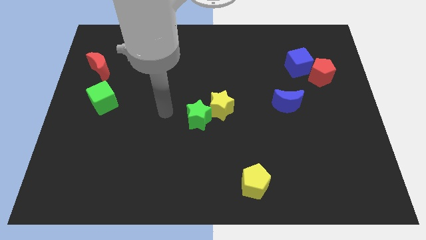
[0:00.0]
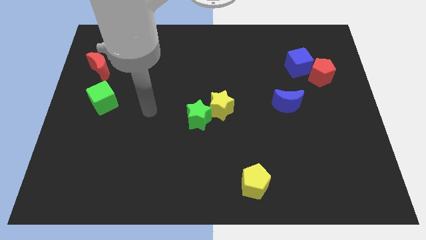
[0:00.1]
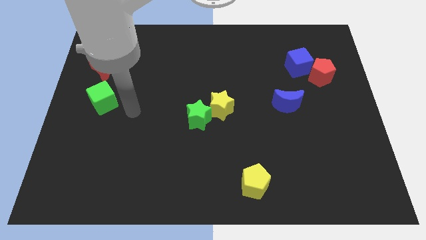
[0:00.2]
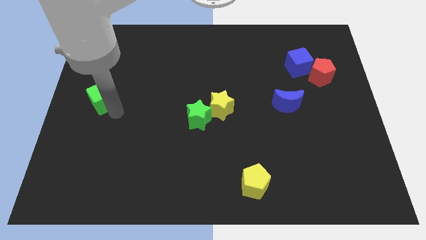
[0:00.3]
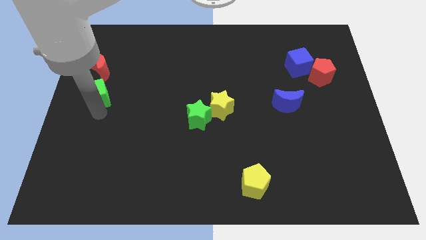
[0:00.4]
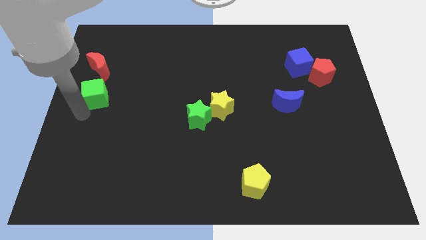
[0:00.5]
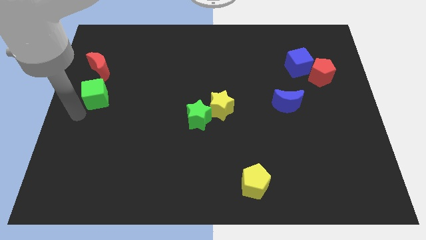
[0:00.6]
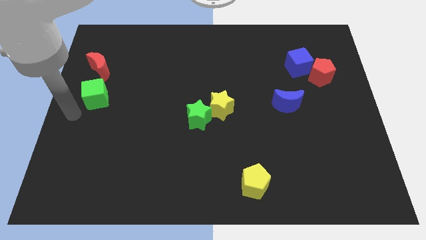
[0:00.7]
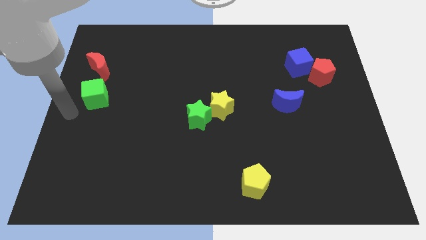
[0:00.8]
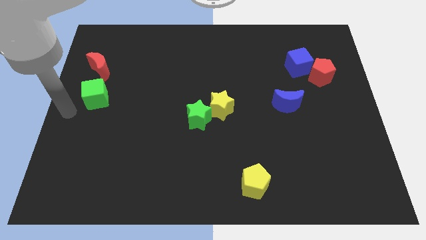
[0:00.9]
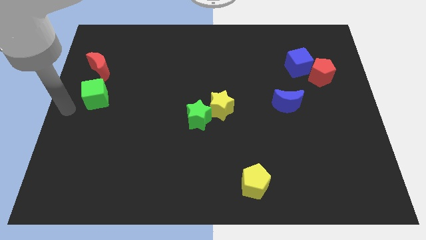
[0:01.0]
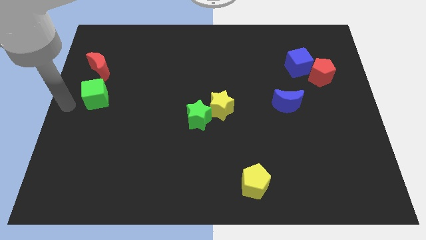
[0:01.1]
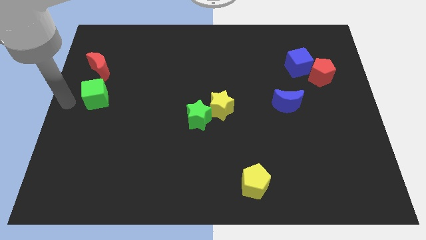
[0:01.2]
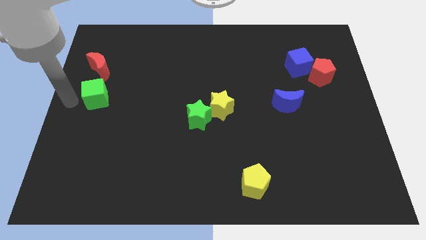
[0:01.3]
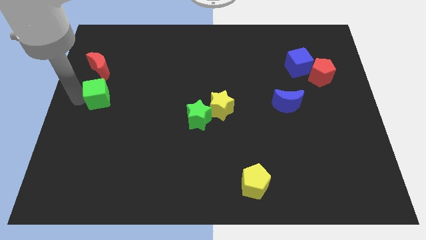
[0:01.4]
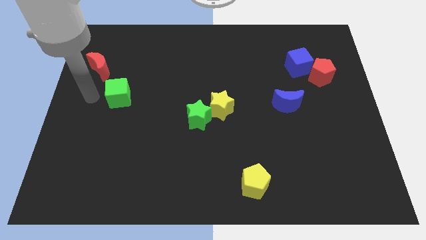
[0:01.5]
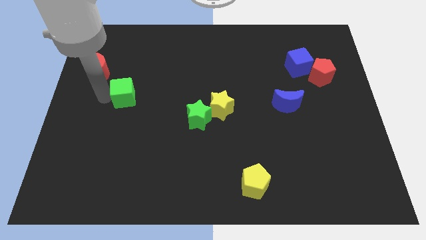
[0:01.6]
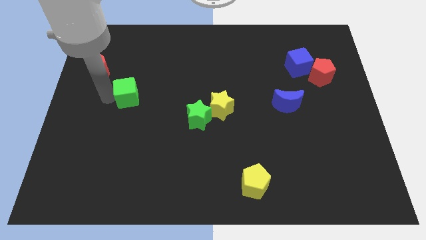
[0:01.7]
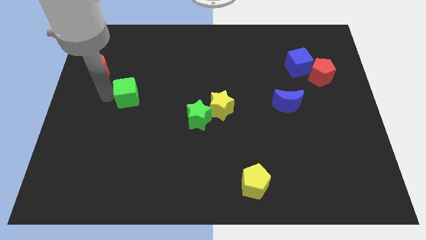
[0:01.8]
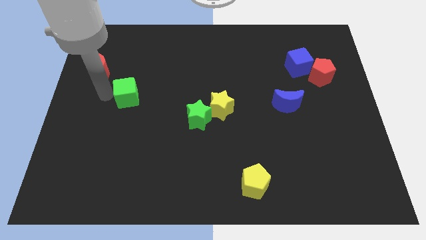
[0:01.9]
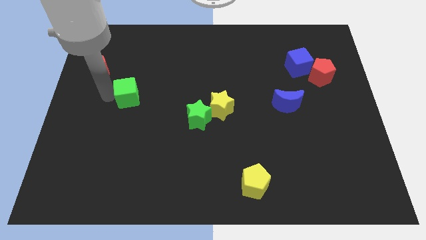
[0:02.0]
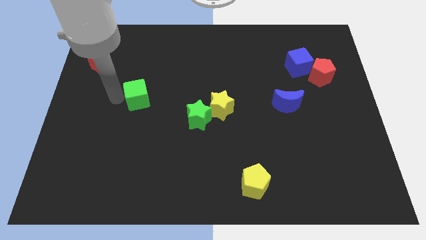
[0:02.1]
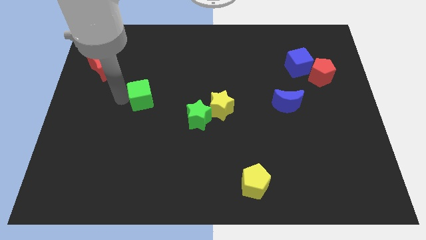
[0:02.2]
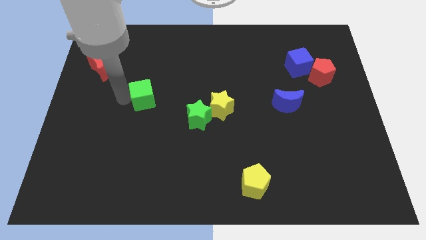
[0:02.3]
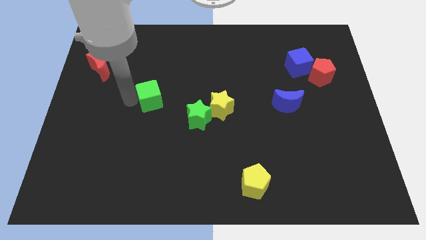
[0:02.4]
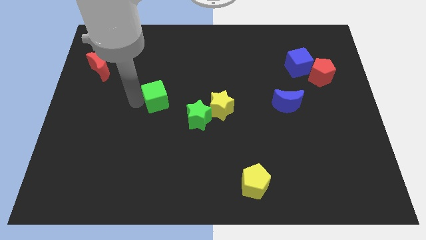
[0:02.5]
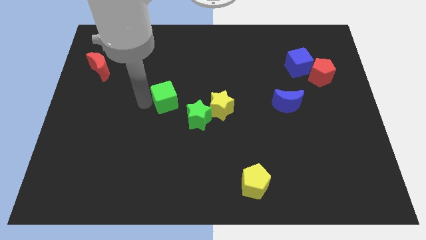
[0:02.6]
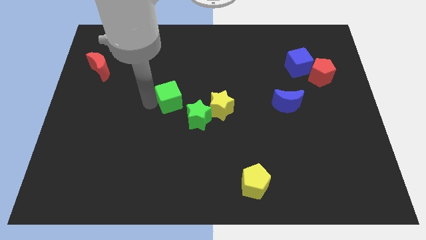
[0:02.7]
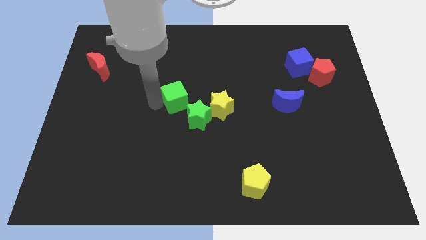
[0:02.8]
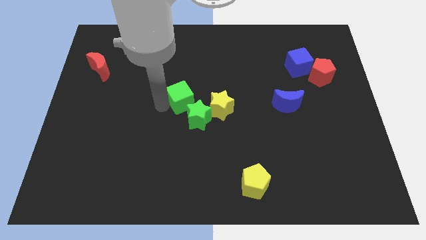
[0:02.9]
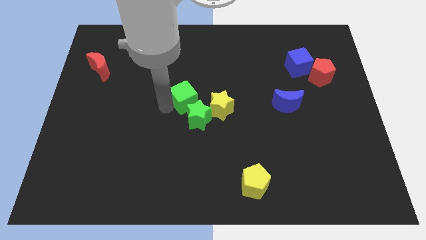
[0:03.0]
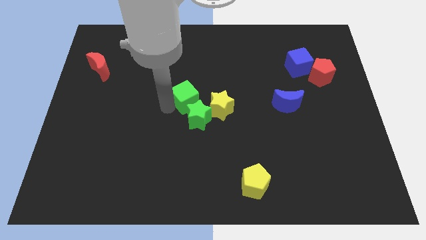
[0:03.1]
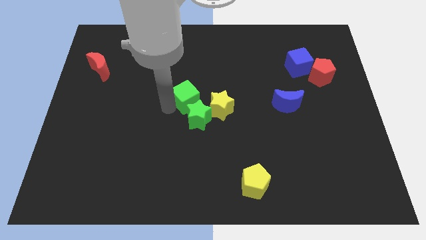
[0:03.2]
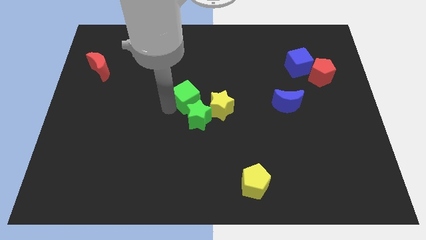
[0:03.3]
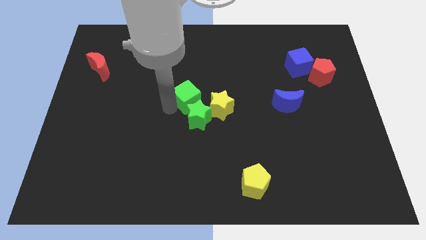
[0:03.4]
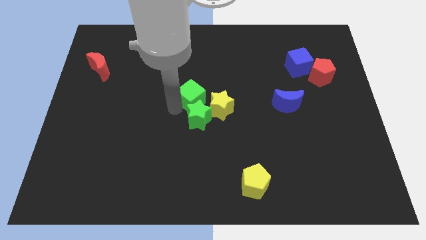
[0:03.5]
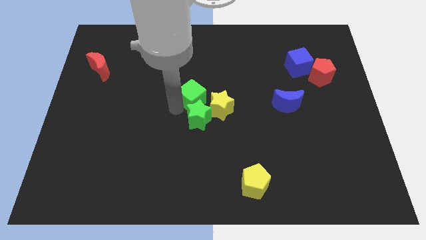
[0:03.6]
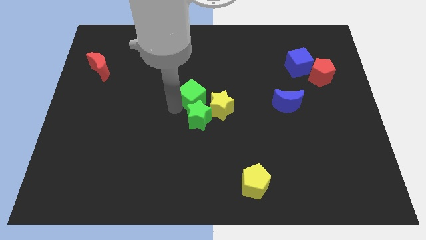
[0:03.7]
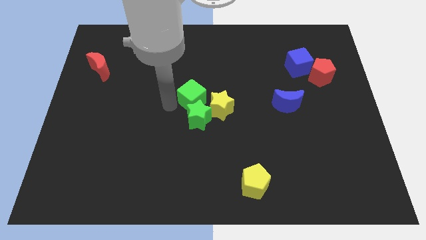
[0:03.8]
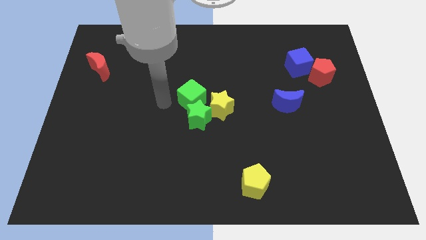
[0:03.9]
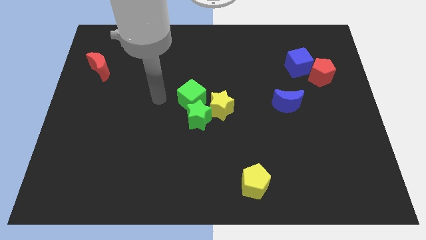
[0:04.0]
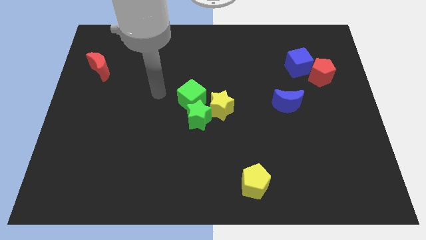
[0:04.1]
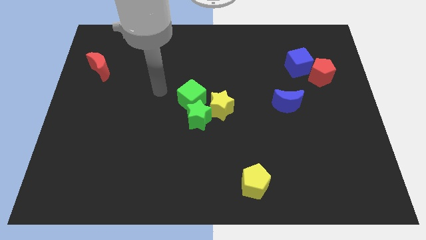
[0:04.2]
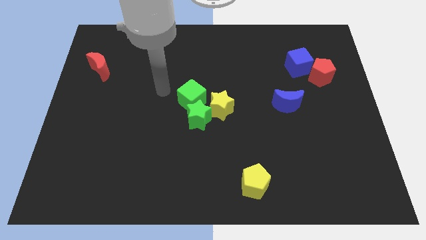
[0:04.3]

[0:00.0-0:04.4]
place the green cube above the green star

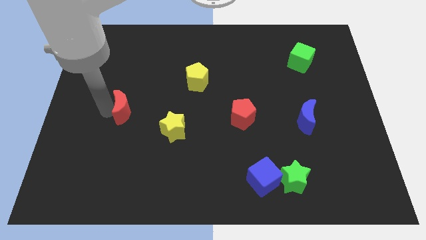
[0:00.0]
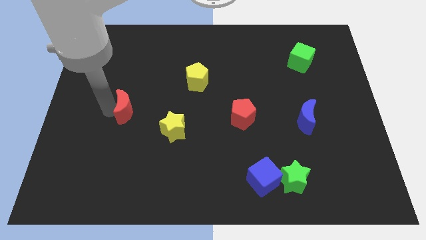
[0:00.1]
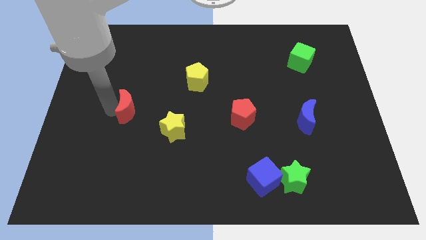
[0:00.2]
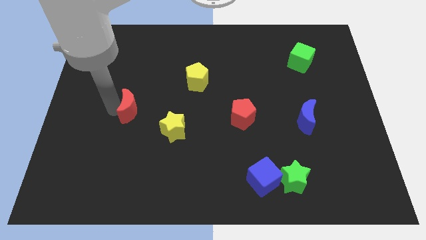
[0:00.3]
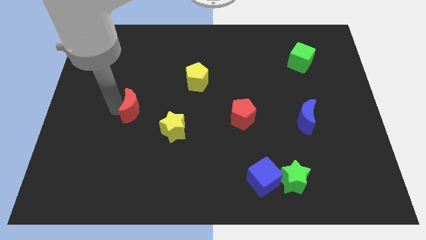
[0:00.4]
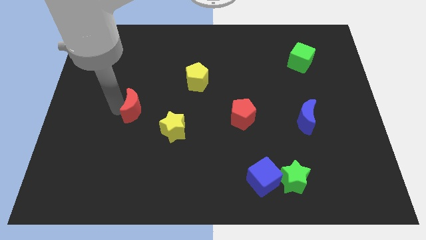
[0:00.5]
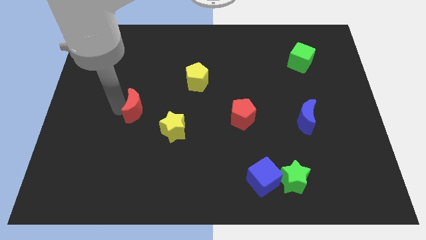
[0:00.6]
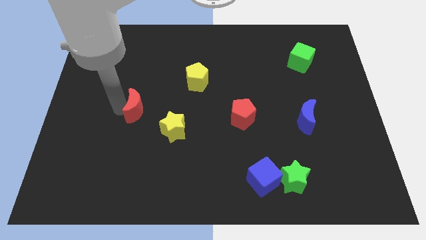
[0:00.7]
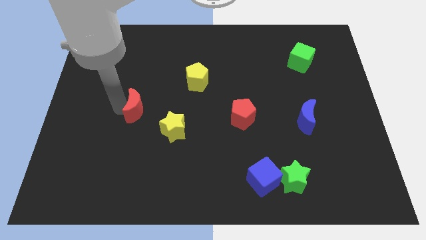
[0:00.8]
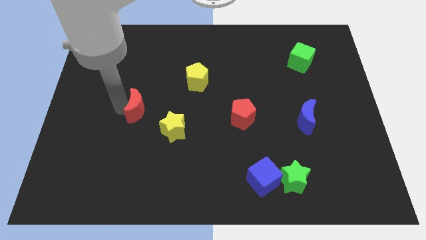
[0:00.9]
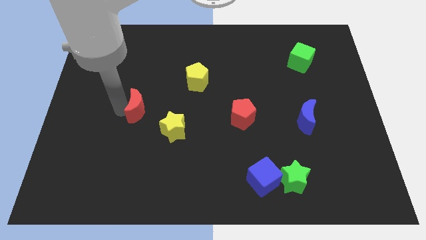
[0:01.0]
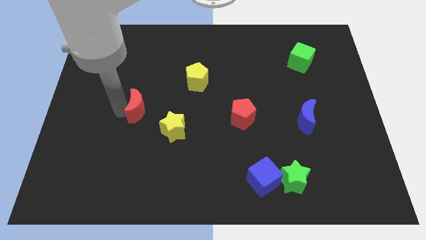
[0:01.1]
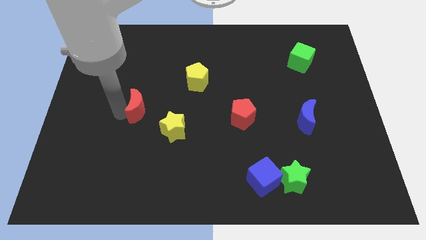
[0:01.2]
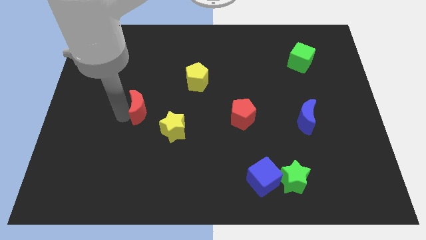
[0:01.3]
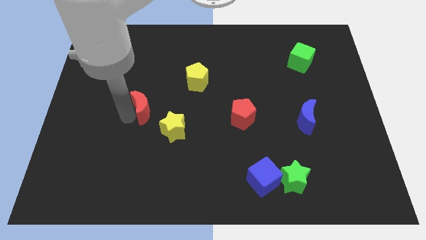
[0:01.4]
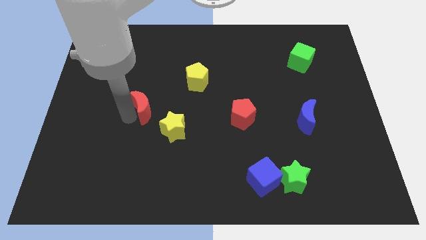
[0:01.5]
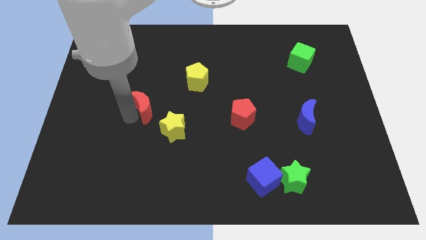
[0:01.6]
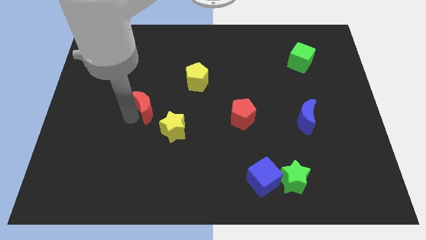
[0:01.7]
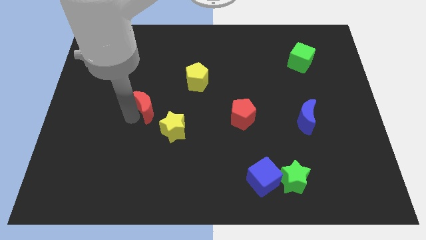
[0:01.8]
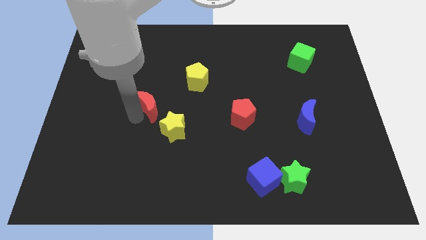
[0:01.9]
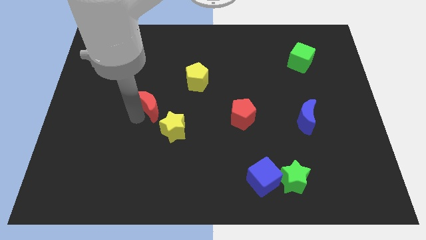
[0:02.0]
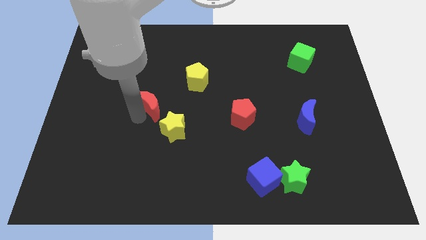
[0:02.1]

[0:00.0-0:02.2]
slide the red moon to the top left side of the yellow star

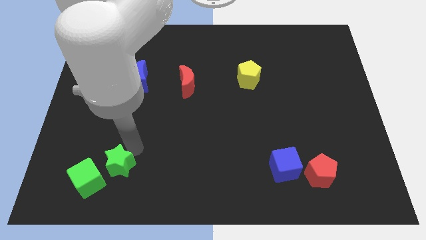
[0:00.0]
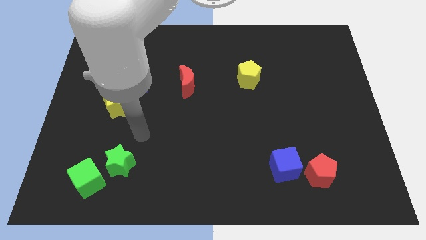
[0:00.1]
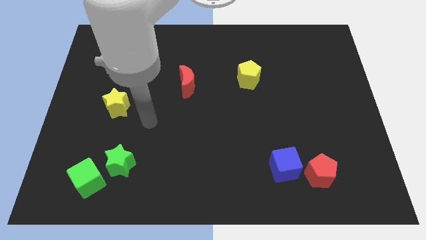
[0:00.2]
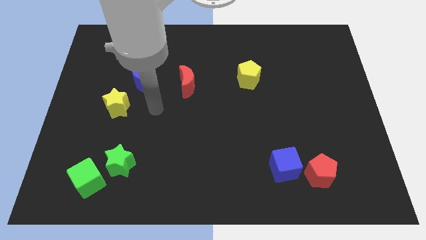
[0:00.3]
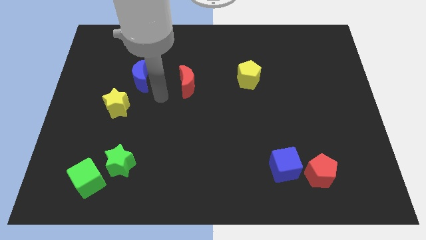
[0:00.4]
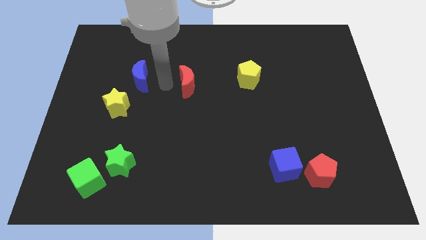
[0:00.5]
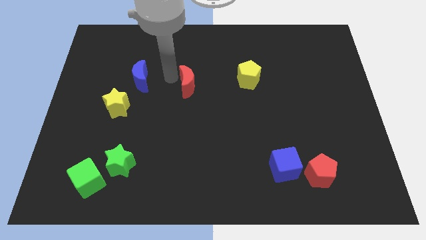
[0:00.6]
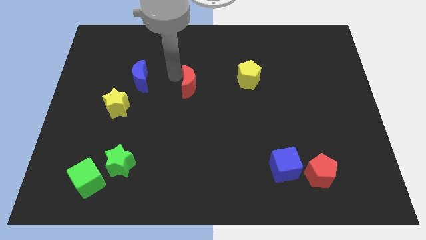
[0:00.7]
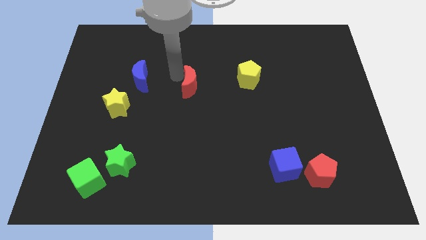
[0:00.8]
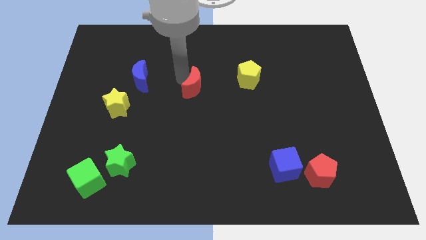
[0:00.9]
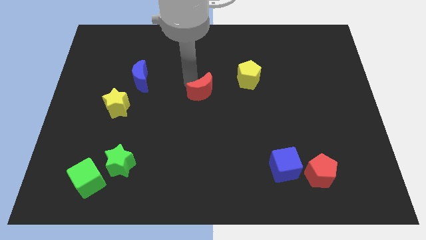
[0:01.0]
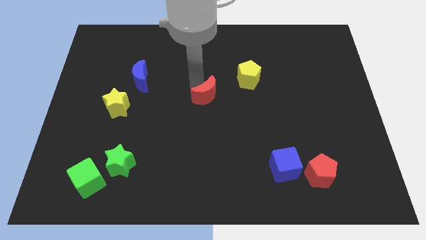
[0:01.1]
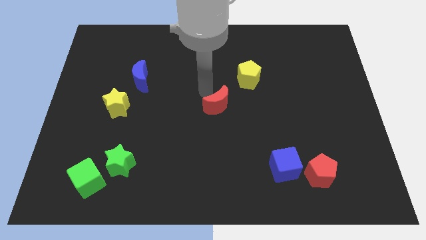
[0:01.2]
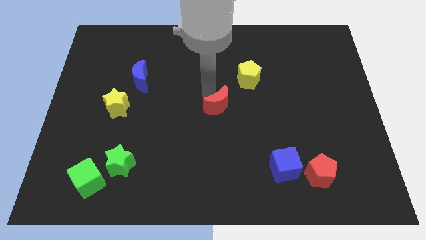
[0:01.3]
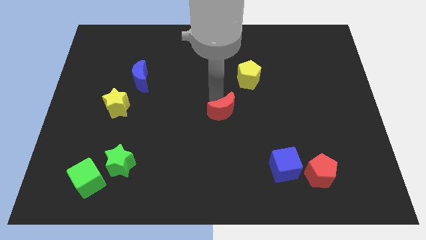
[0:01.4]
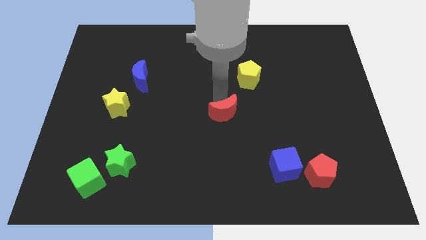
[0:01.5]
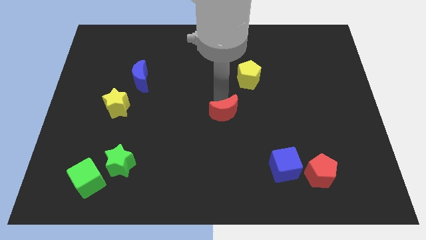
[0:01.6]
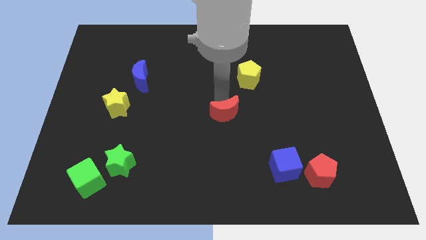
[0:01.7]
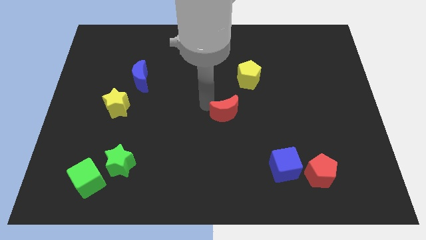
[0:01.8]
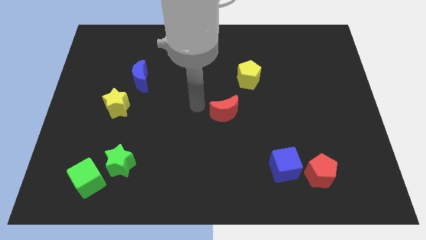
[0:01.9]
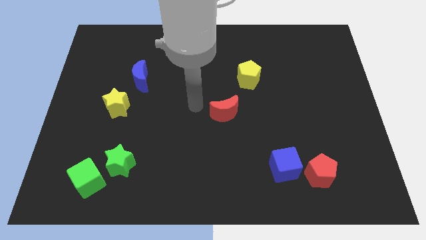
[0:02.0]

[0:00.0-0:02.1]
place the red moon at the center of the board

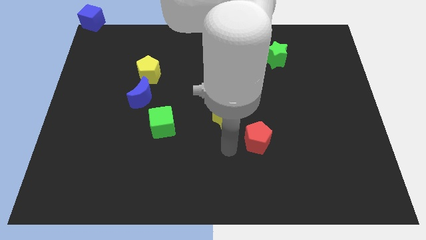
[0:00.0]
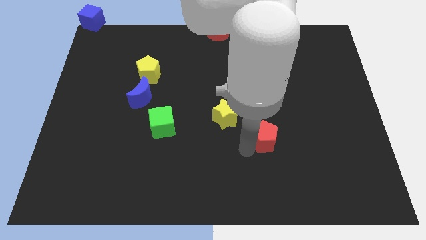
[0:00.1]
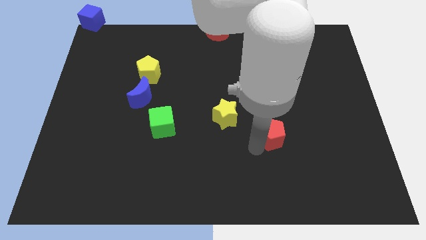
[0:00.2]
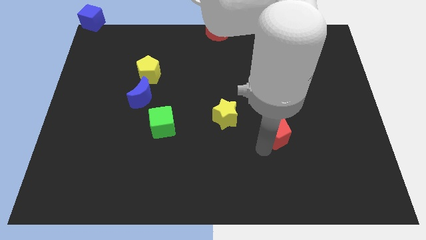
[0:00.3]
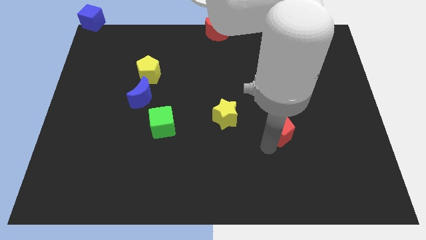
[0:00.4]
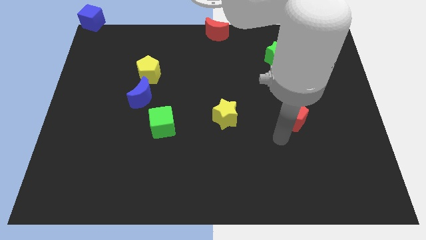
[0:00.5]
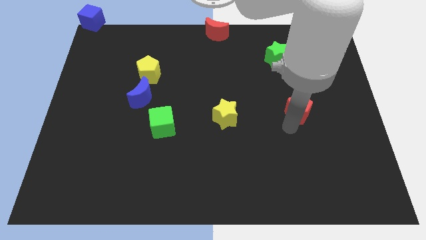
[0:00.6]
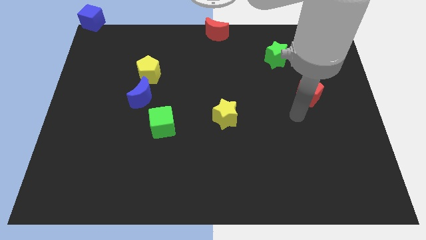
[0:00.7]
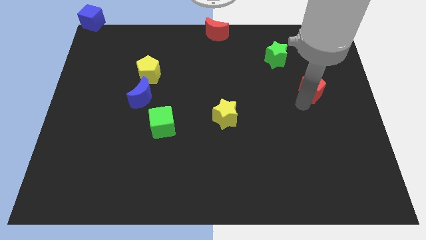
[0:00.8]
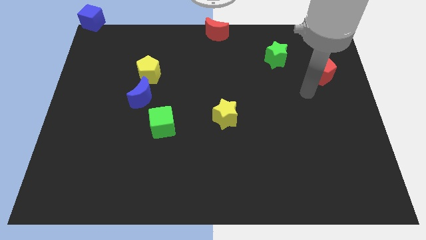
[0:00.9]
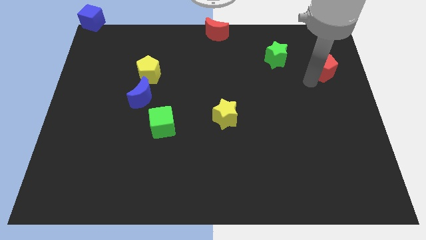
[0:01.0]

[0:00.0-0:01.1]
move the red pentagon slightly towards the top right
